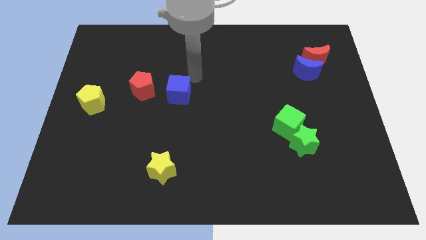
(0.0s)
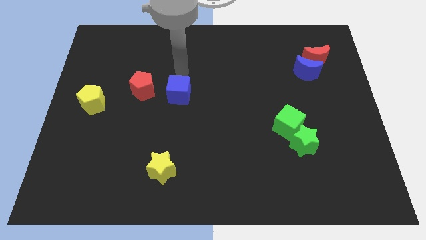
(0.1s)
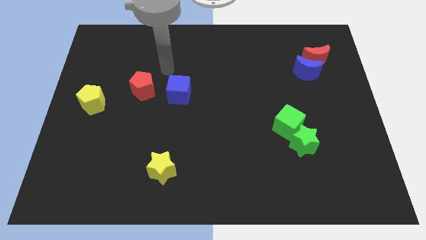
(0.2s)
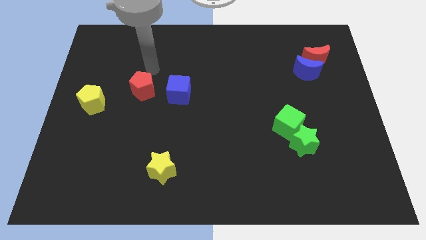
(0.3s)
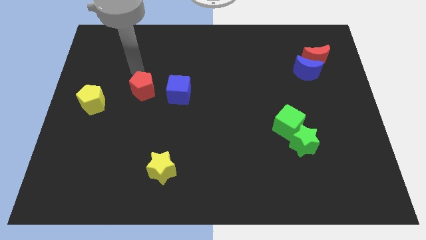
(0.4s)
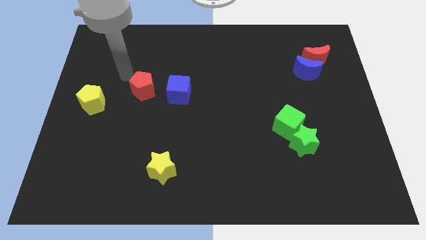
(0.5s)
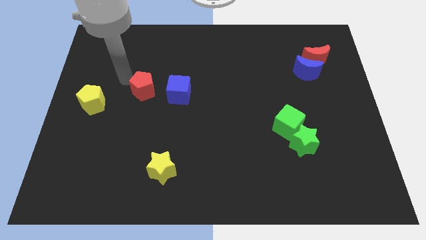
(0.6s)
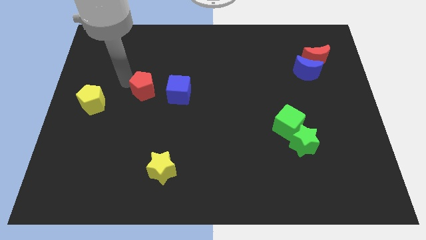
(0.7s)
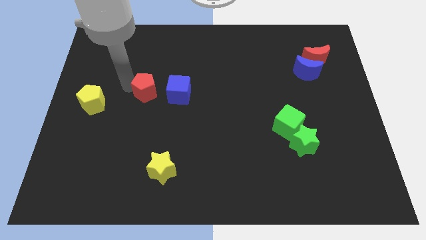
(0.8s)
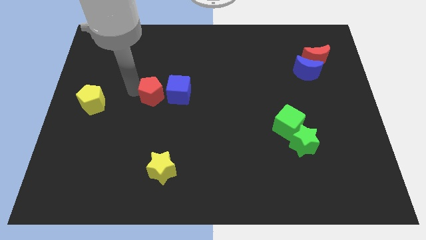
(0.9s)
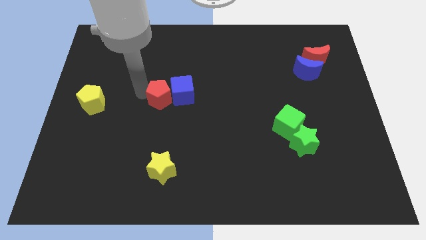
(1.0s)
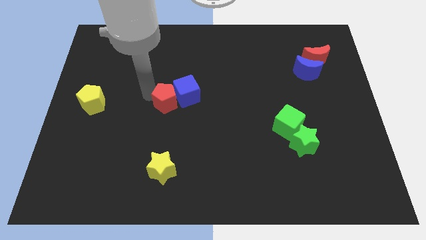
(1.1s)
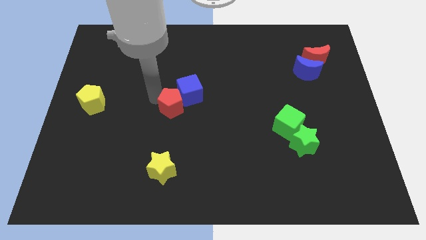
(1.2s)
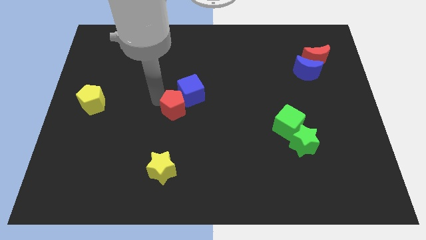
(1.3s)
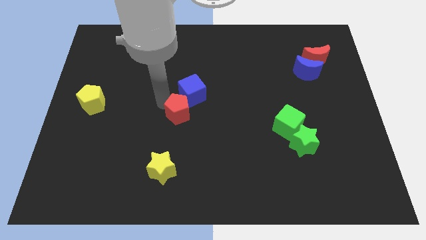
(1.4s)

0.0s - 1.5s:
push the red pentagon into the blue cube

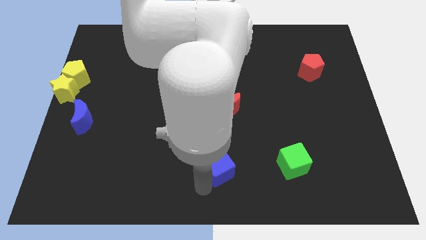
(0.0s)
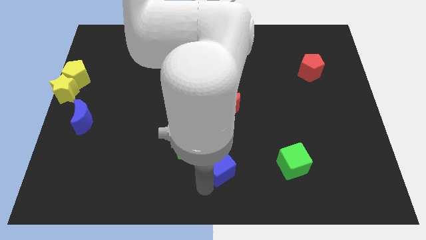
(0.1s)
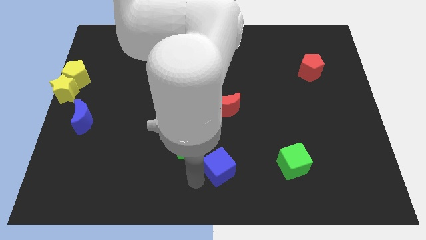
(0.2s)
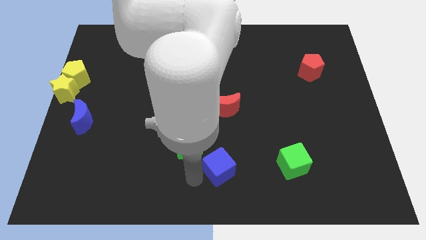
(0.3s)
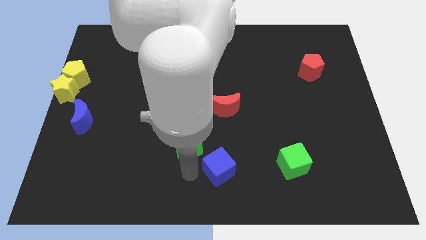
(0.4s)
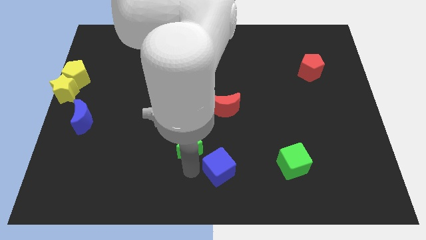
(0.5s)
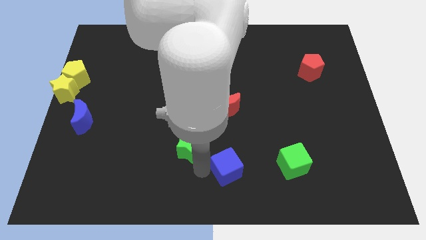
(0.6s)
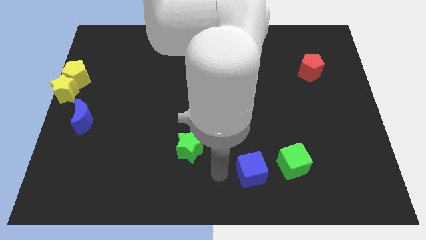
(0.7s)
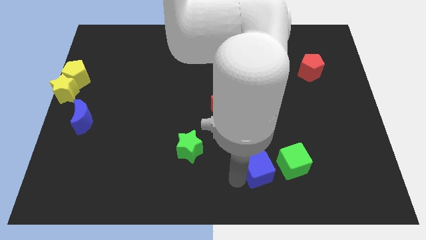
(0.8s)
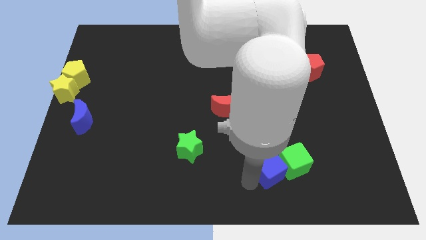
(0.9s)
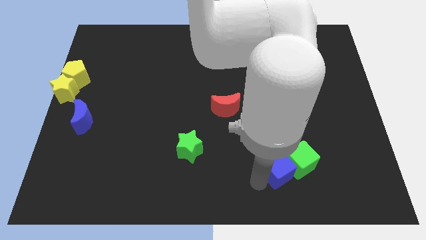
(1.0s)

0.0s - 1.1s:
push the blue cube into the green cube

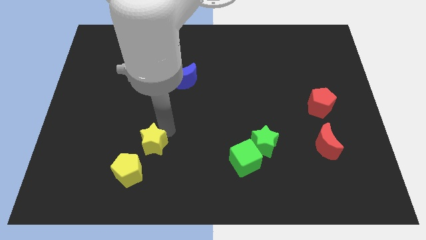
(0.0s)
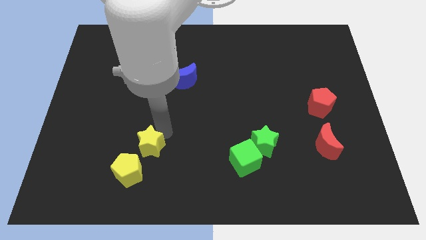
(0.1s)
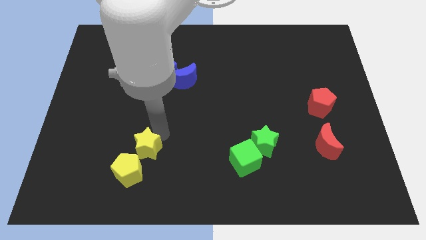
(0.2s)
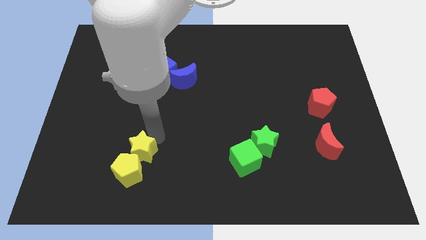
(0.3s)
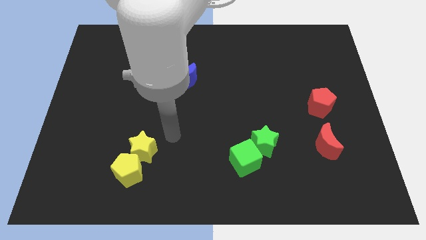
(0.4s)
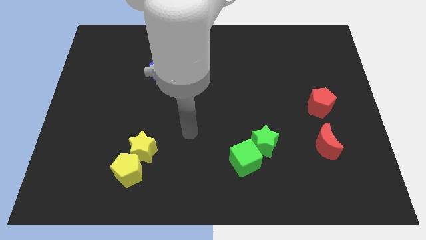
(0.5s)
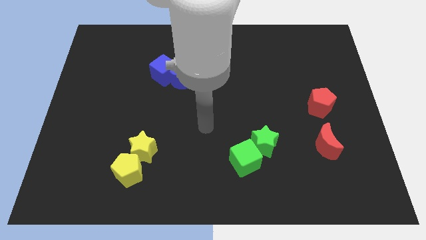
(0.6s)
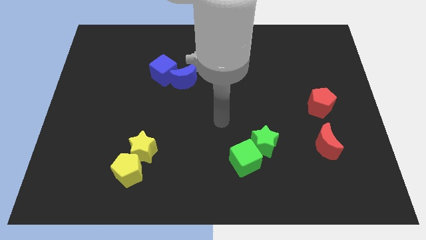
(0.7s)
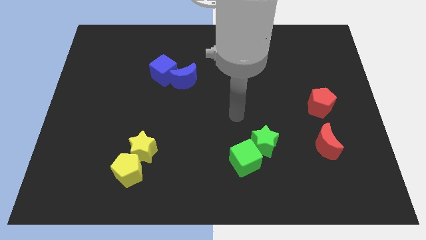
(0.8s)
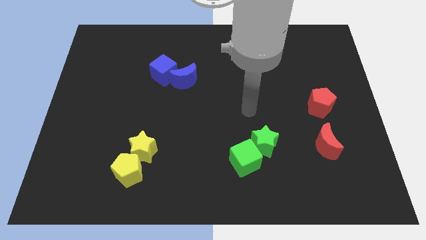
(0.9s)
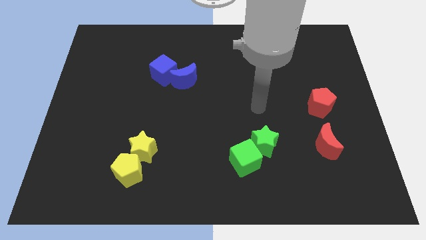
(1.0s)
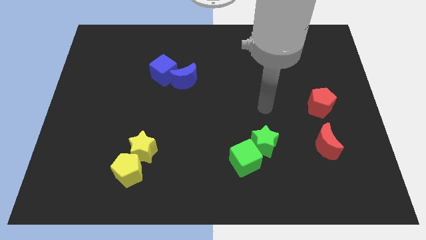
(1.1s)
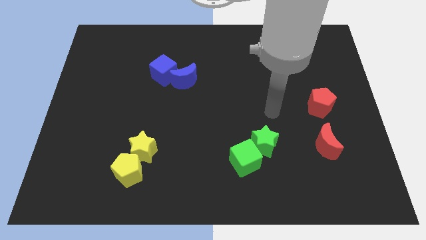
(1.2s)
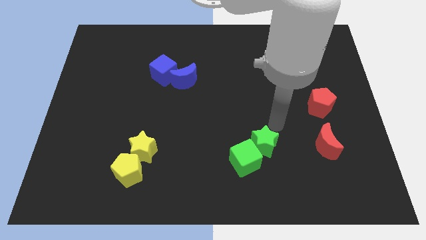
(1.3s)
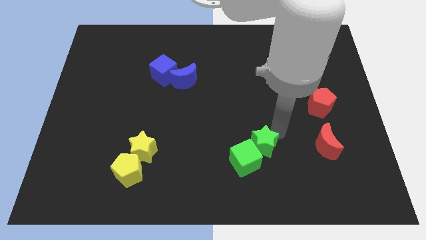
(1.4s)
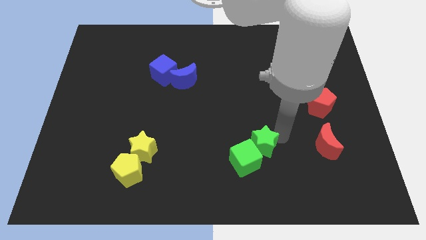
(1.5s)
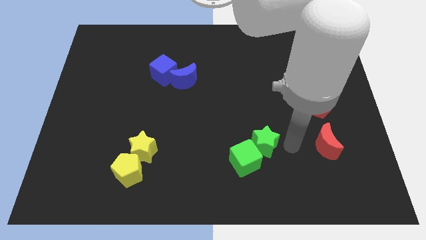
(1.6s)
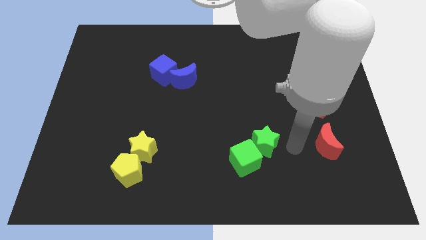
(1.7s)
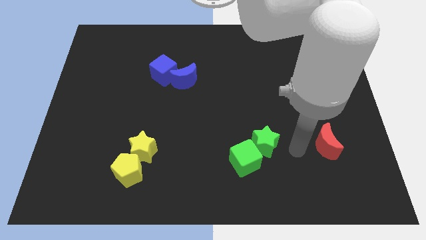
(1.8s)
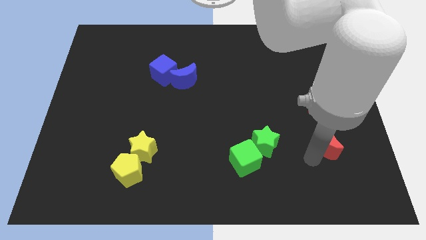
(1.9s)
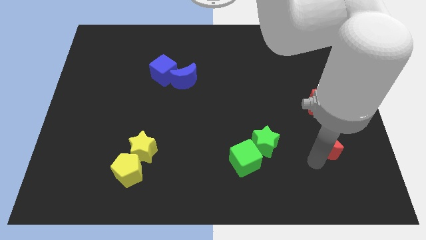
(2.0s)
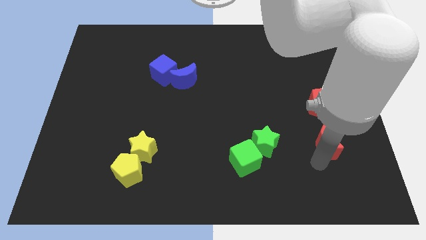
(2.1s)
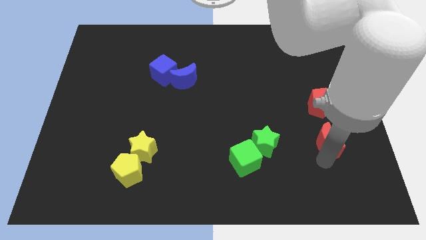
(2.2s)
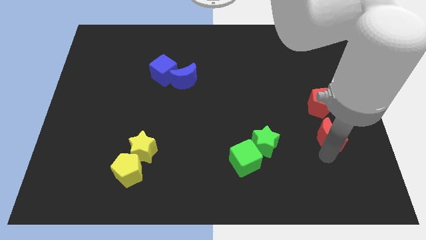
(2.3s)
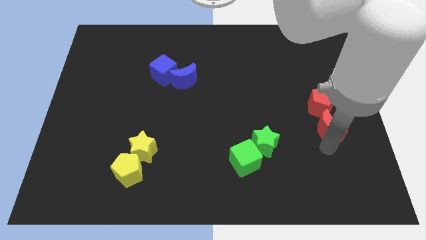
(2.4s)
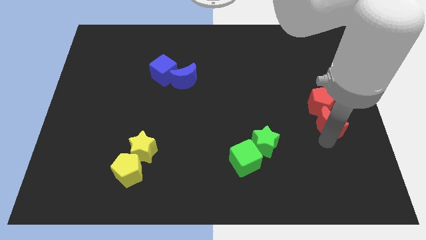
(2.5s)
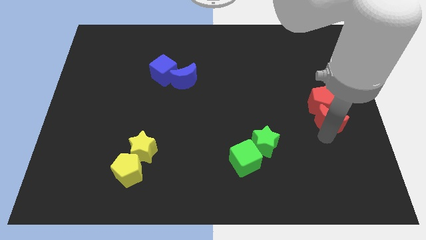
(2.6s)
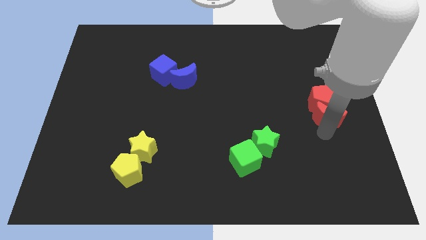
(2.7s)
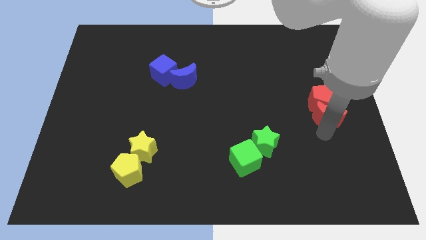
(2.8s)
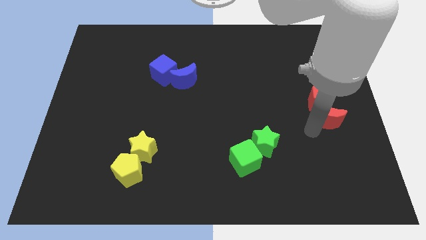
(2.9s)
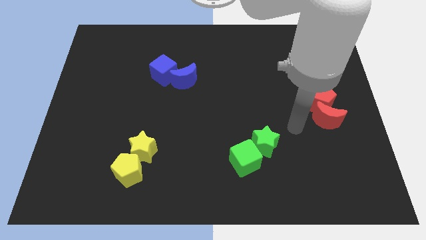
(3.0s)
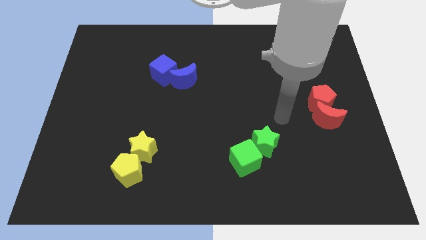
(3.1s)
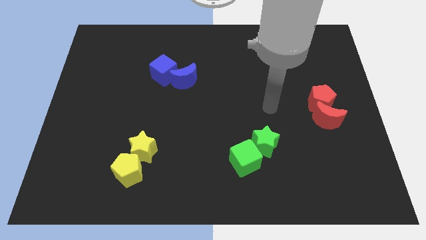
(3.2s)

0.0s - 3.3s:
move the red crescent into the red pentagon

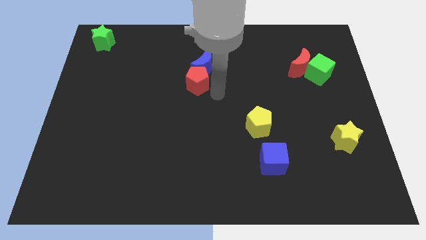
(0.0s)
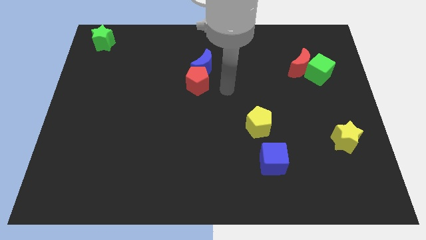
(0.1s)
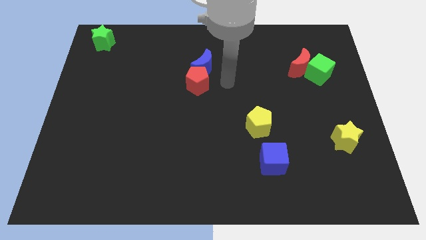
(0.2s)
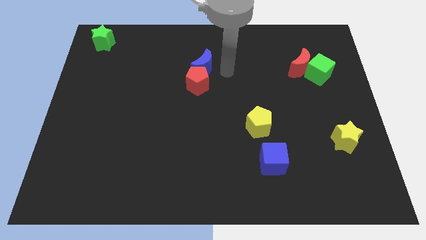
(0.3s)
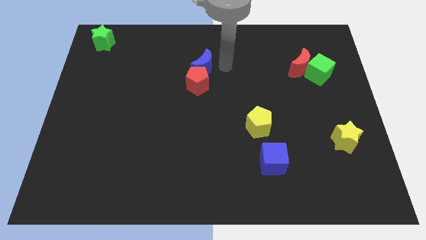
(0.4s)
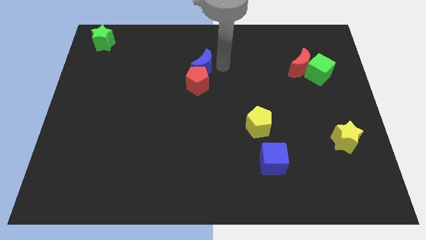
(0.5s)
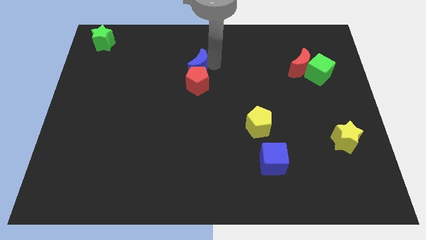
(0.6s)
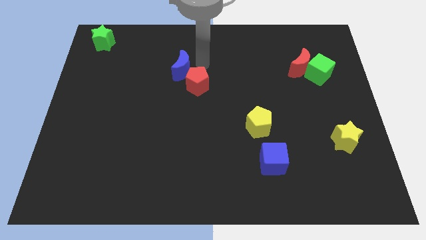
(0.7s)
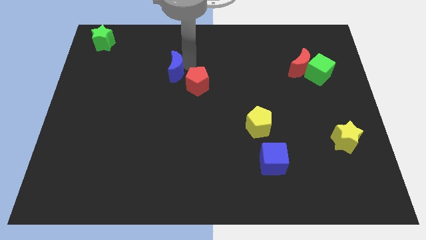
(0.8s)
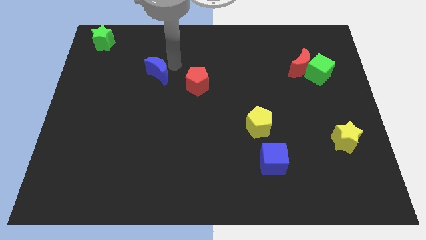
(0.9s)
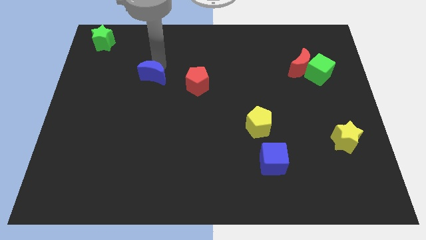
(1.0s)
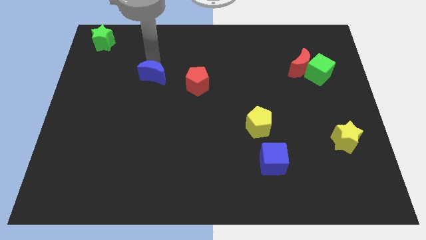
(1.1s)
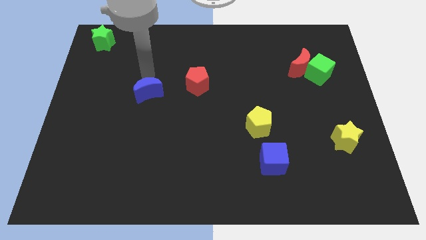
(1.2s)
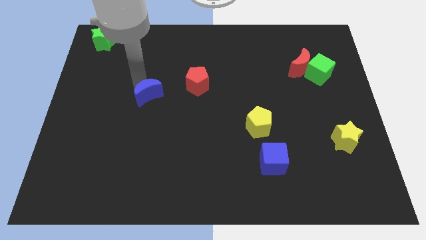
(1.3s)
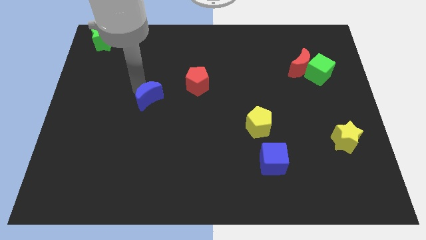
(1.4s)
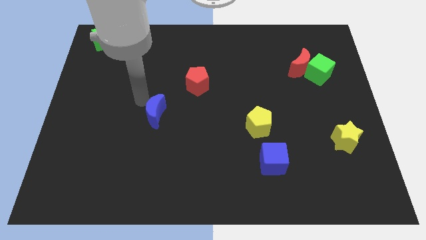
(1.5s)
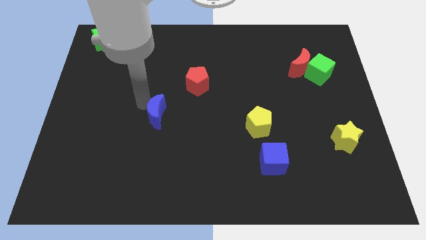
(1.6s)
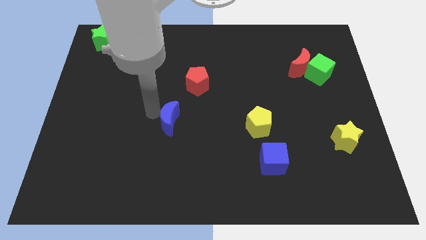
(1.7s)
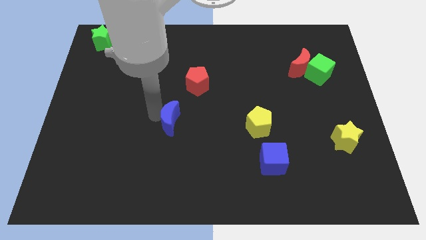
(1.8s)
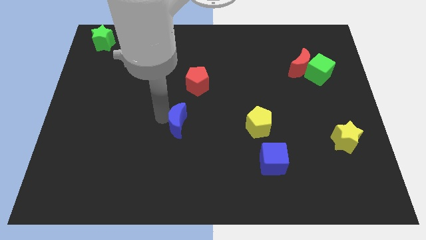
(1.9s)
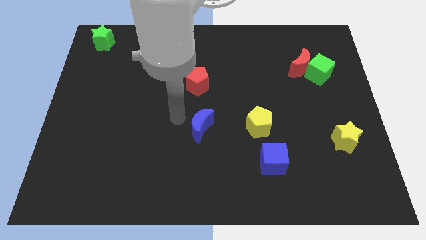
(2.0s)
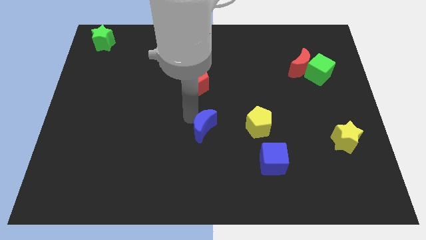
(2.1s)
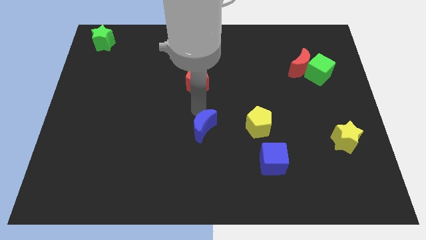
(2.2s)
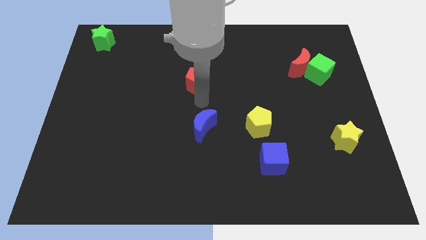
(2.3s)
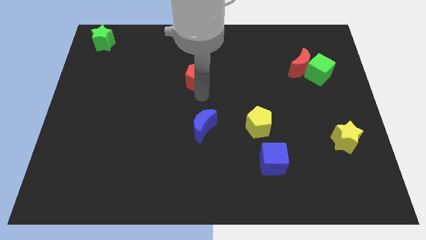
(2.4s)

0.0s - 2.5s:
push the blue crescent at the left side of the yellow pentagon

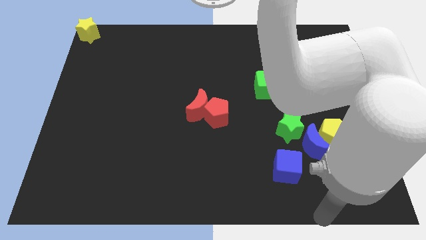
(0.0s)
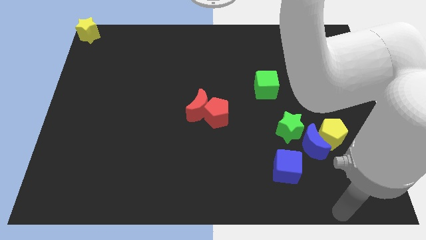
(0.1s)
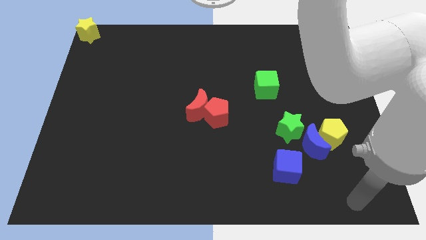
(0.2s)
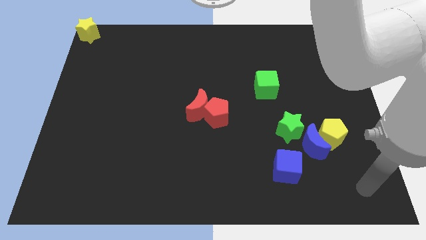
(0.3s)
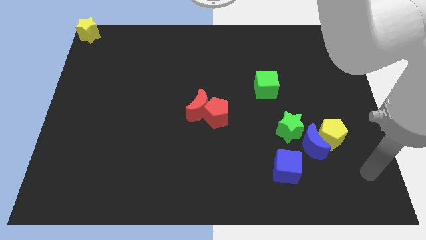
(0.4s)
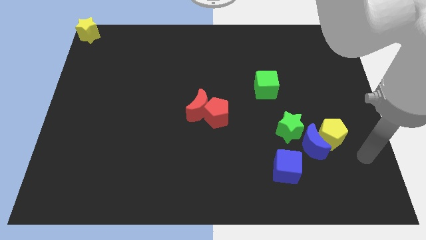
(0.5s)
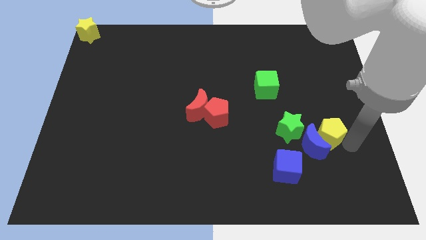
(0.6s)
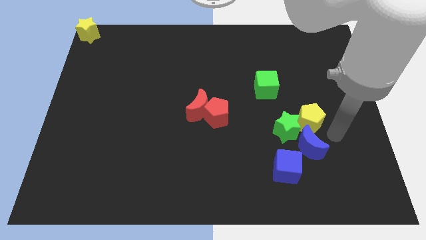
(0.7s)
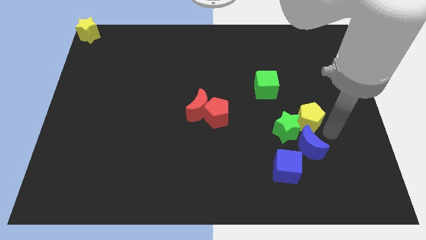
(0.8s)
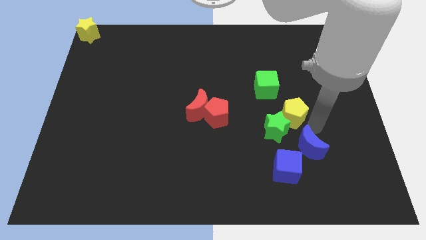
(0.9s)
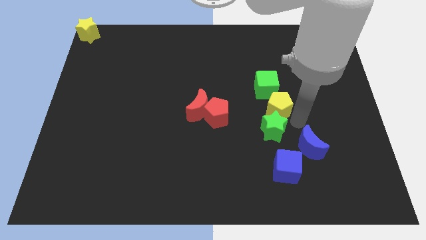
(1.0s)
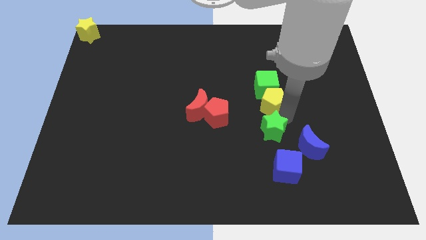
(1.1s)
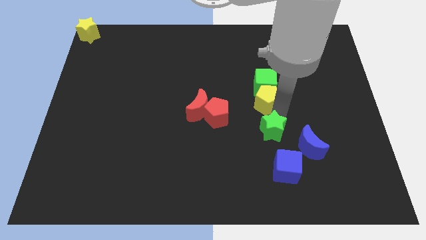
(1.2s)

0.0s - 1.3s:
push the yellow pentagon above to the green star
